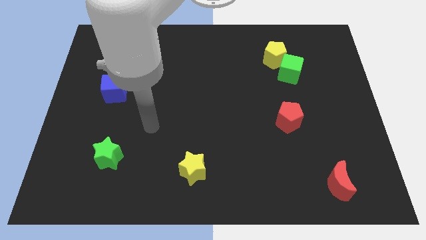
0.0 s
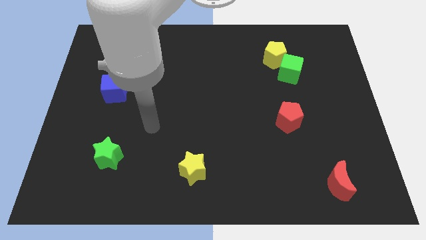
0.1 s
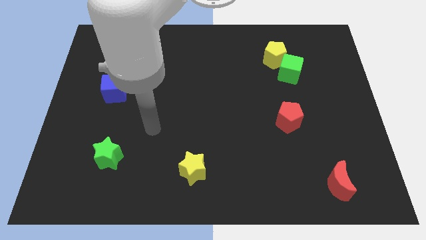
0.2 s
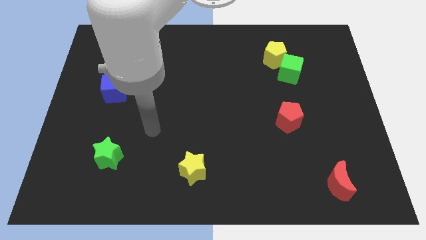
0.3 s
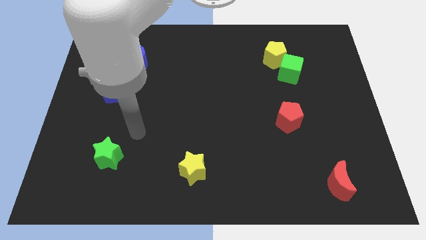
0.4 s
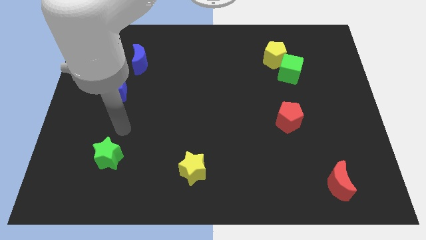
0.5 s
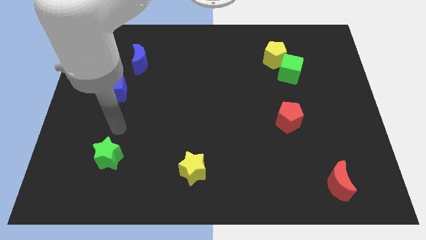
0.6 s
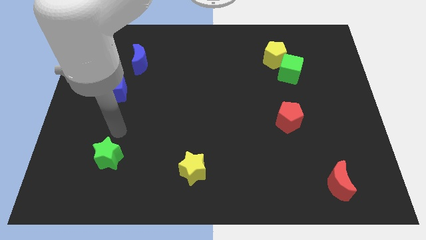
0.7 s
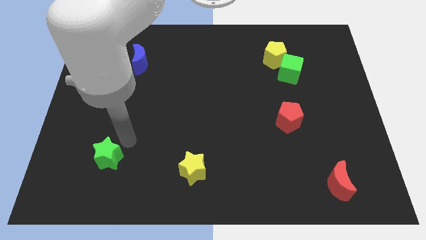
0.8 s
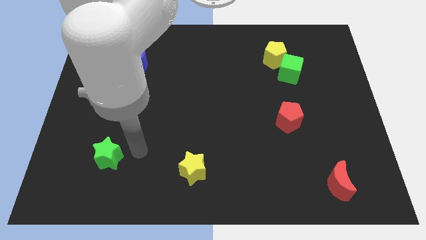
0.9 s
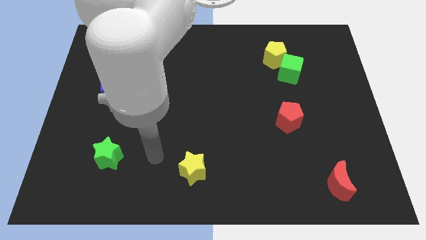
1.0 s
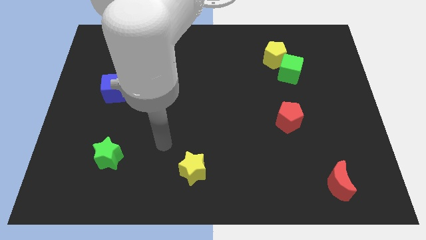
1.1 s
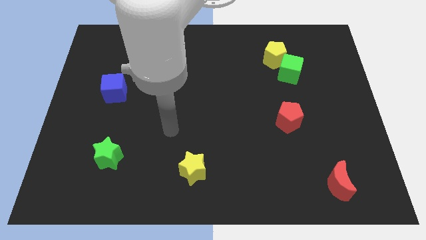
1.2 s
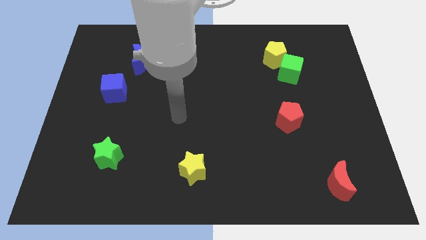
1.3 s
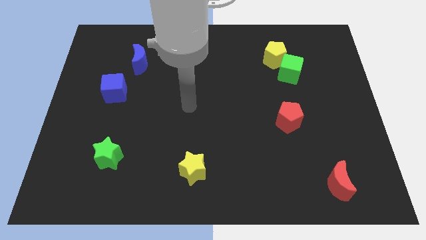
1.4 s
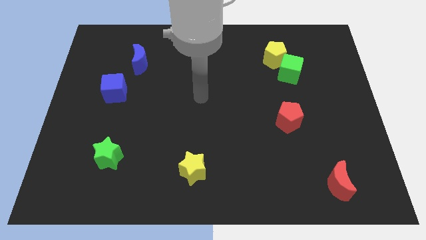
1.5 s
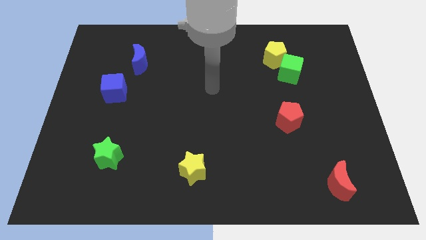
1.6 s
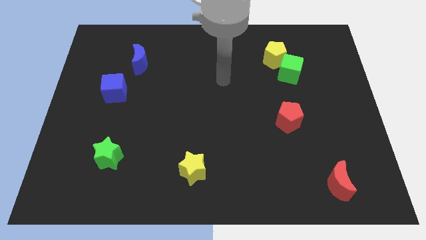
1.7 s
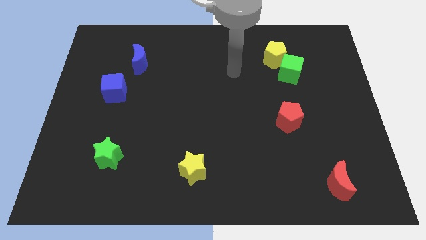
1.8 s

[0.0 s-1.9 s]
point your arm to the left of yellow pentagon

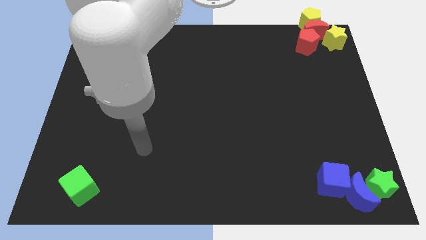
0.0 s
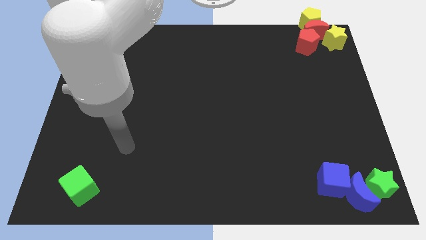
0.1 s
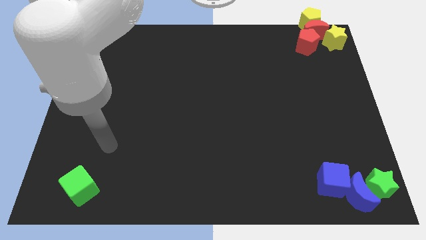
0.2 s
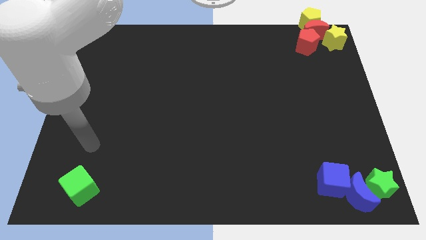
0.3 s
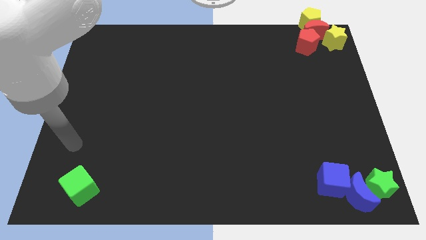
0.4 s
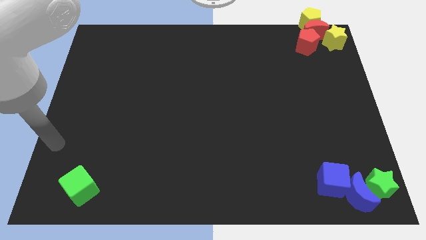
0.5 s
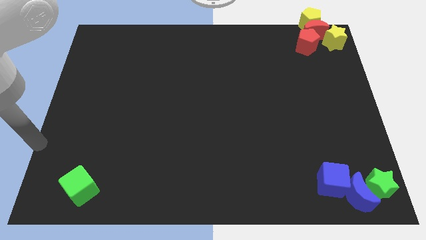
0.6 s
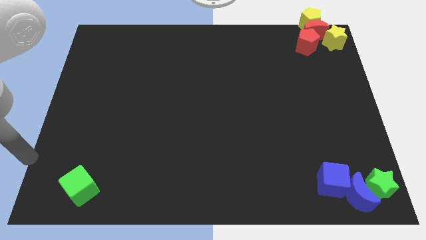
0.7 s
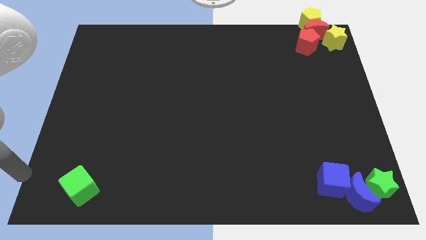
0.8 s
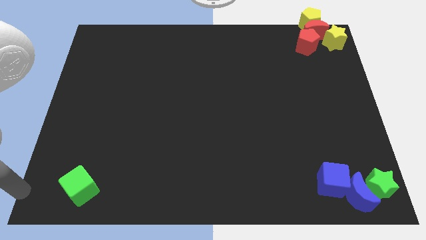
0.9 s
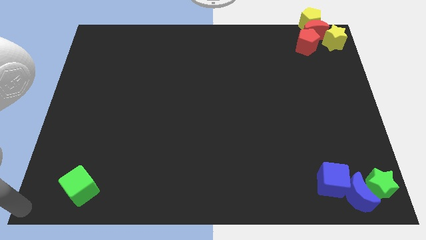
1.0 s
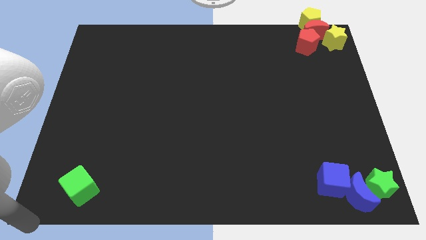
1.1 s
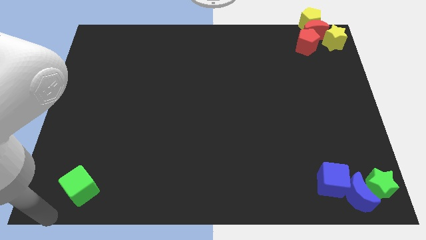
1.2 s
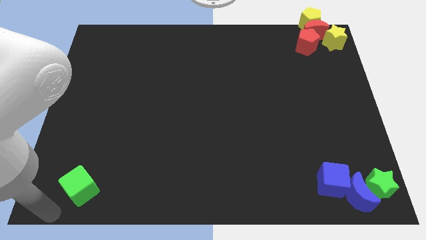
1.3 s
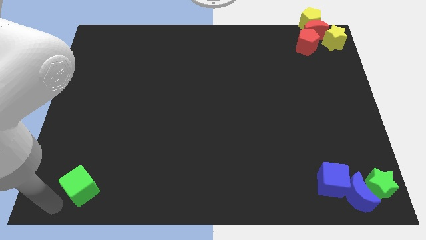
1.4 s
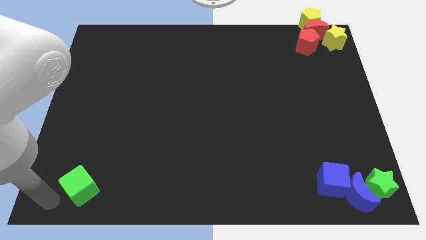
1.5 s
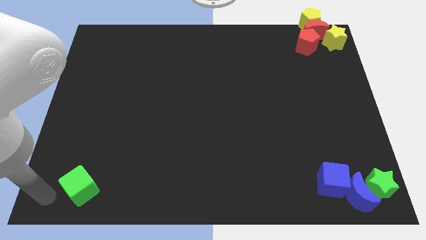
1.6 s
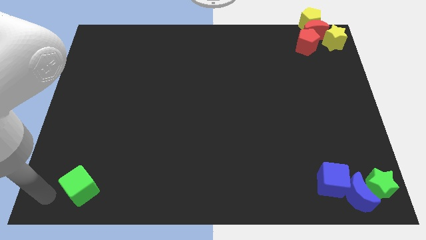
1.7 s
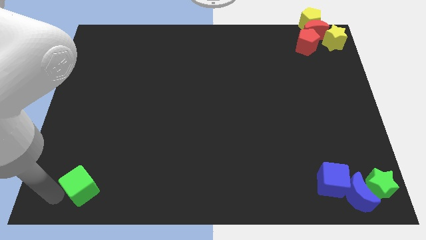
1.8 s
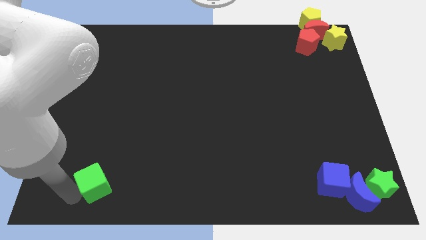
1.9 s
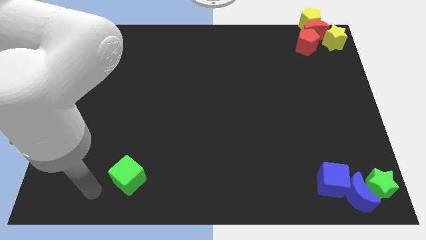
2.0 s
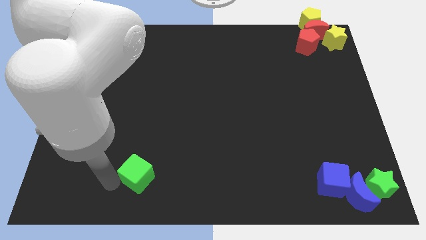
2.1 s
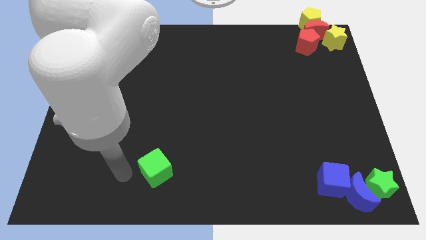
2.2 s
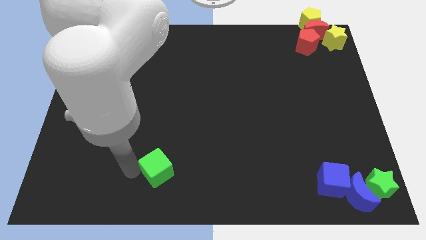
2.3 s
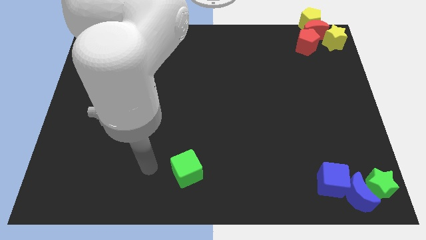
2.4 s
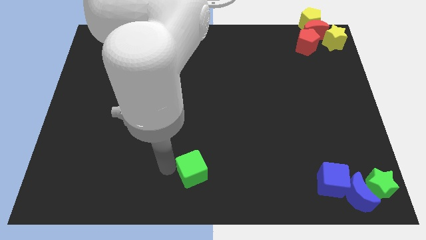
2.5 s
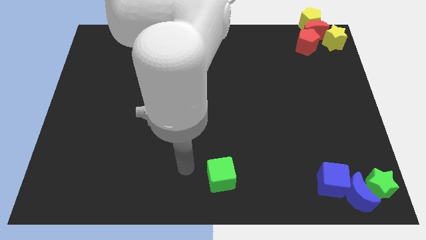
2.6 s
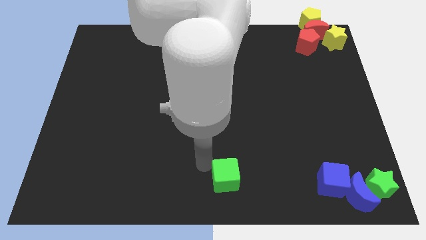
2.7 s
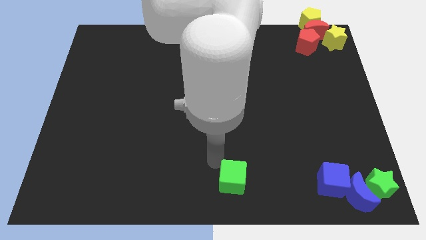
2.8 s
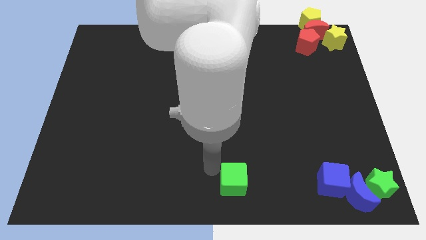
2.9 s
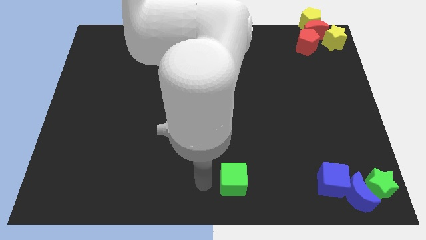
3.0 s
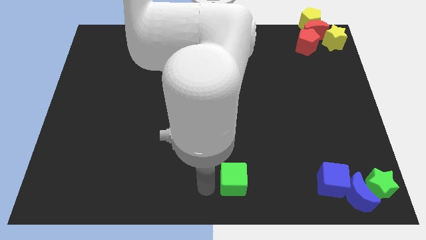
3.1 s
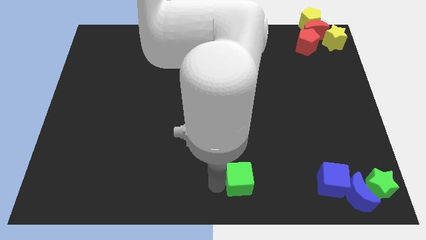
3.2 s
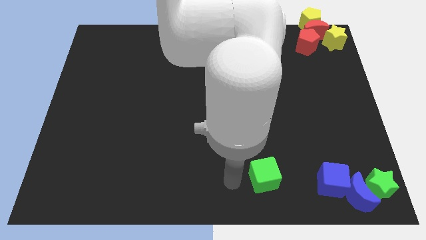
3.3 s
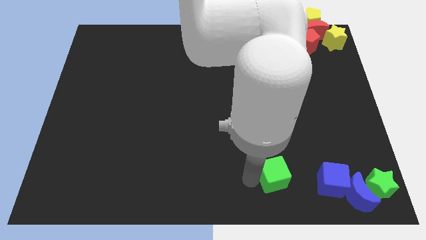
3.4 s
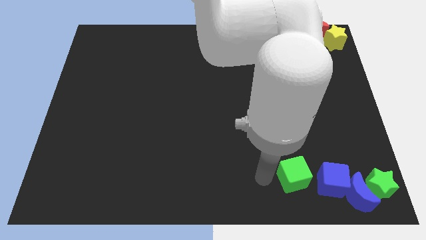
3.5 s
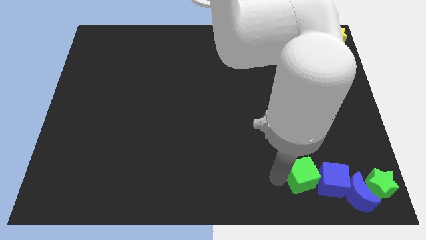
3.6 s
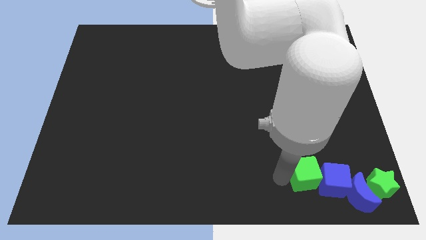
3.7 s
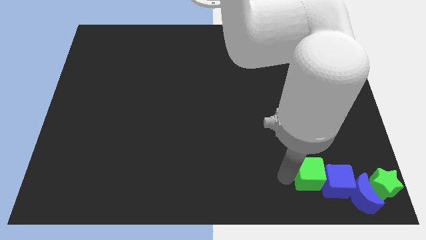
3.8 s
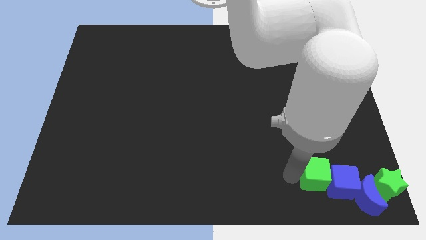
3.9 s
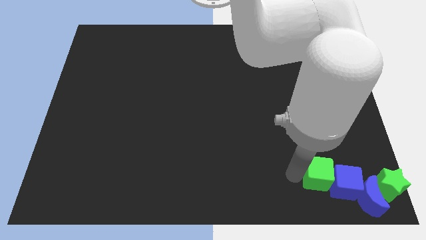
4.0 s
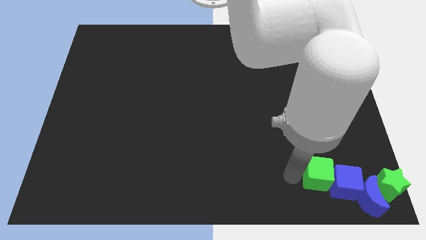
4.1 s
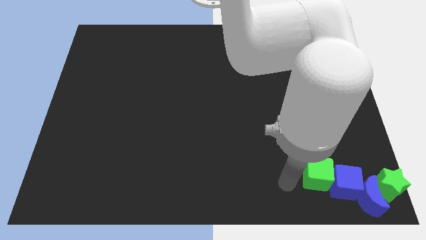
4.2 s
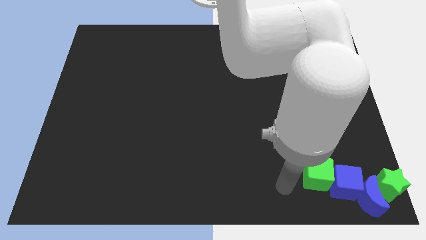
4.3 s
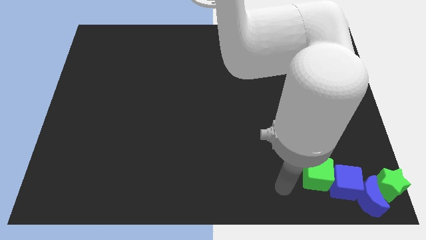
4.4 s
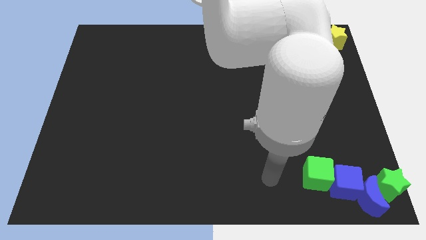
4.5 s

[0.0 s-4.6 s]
place the green cube beside to the blue cube

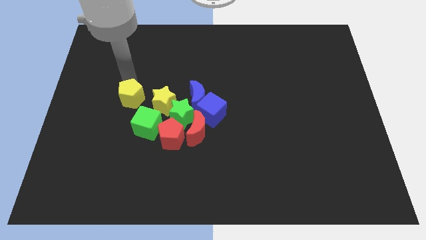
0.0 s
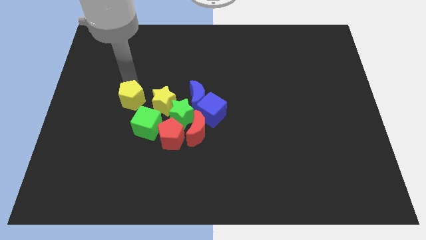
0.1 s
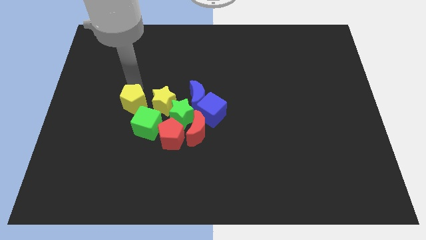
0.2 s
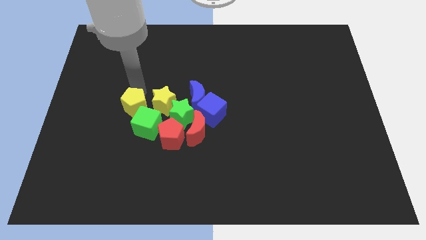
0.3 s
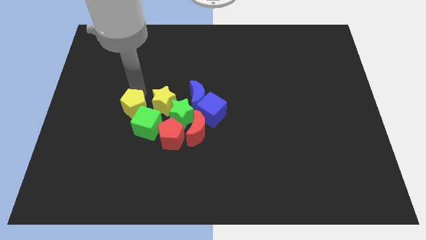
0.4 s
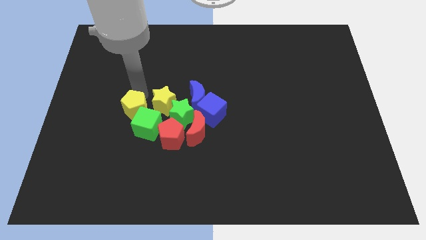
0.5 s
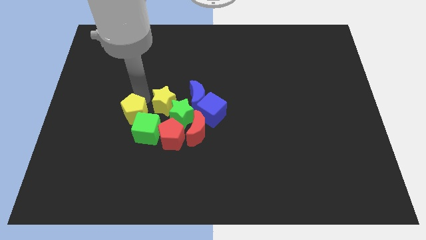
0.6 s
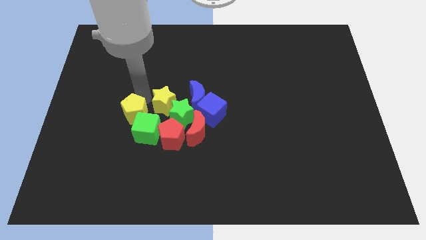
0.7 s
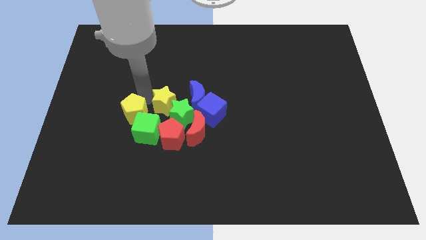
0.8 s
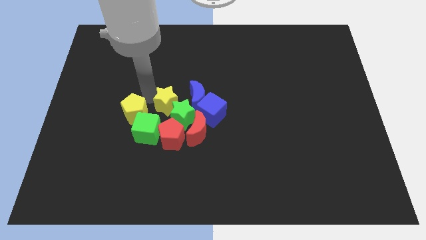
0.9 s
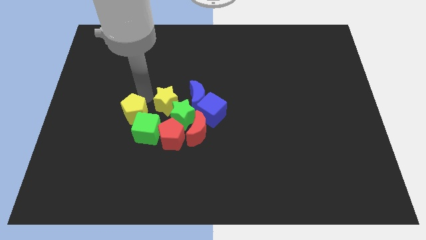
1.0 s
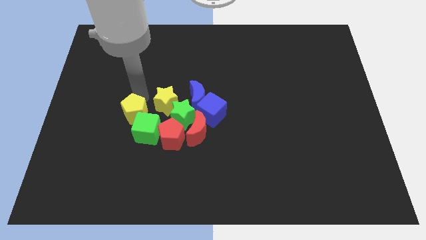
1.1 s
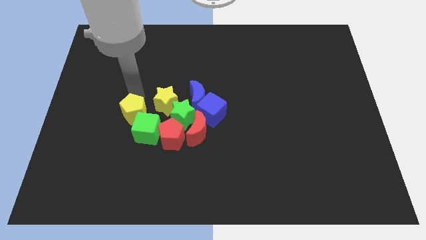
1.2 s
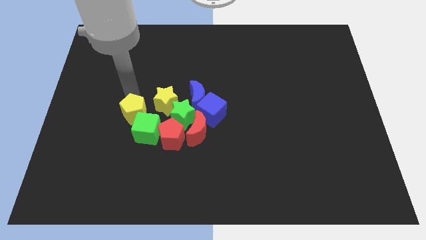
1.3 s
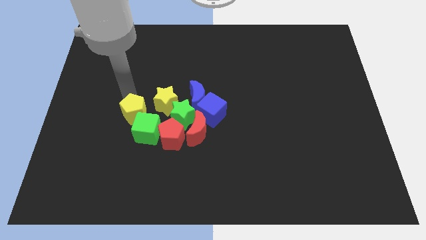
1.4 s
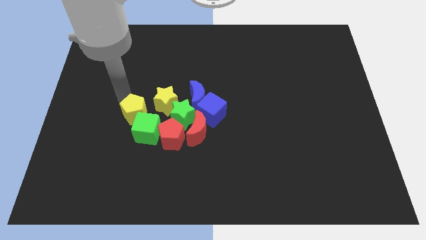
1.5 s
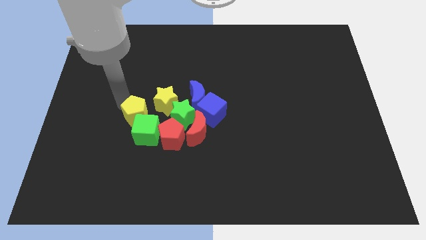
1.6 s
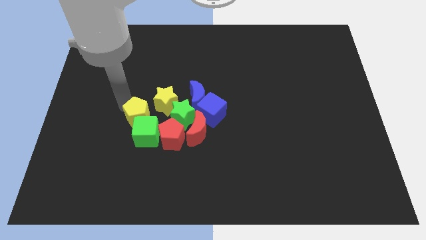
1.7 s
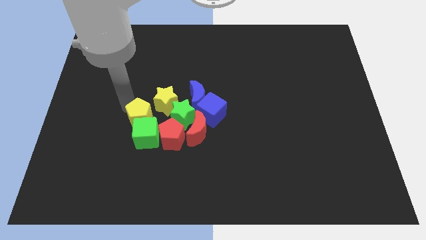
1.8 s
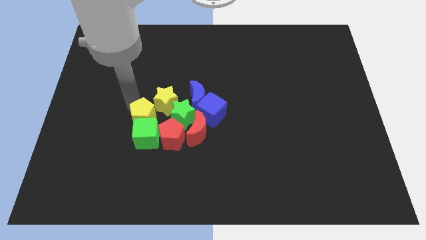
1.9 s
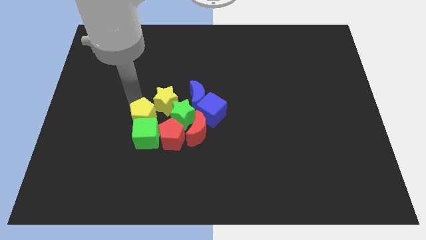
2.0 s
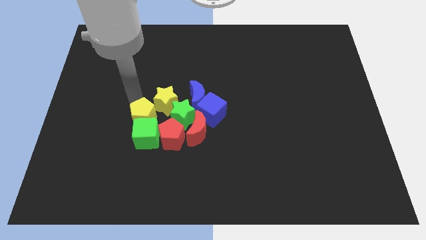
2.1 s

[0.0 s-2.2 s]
place yellow pentagon above green cube

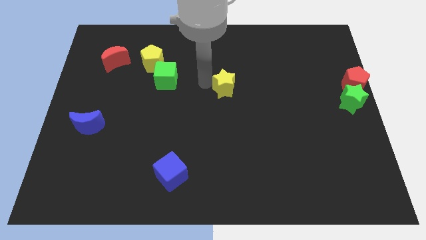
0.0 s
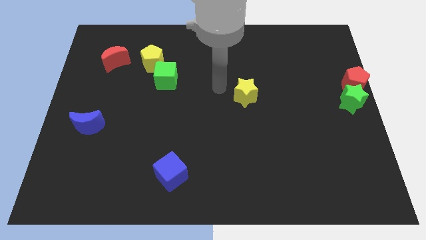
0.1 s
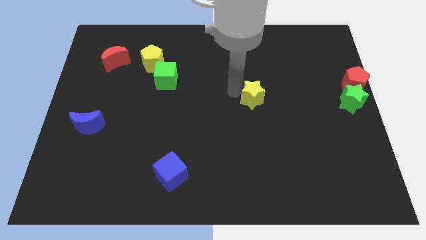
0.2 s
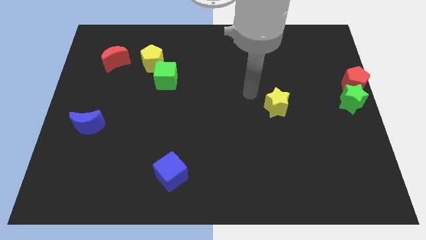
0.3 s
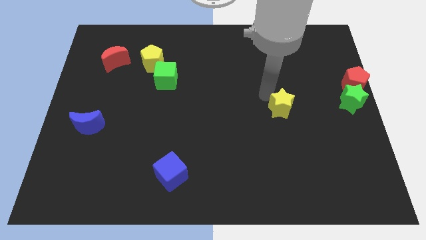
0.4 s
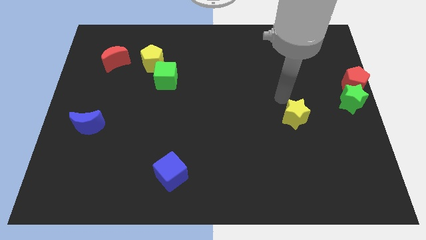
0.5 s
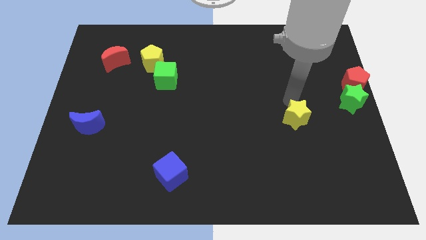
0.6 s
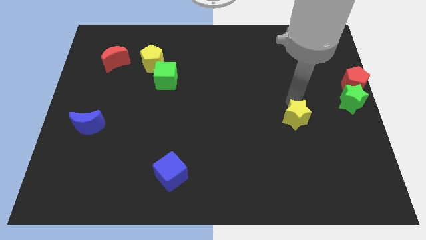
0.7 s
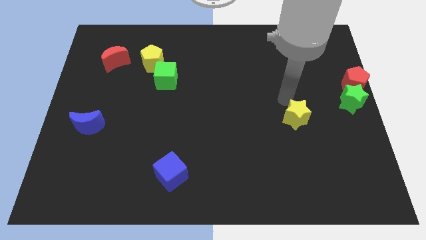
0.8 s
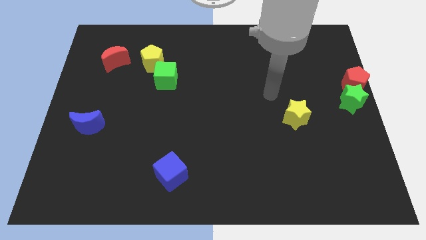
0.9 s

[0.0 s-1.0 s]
push the yellow star to the bottom right
